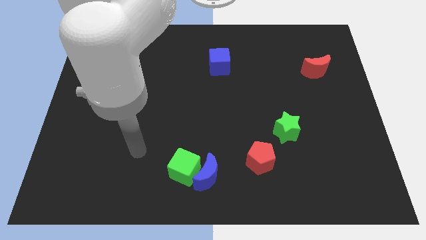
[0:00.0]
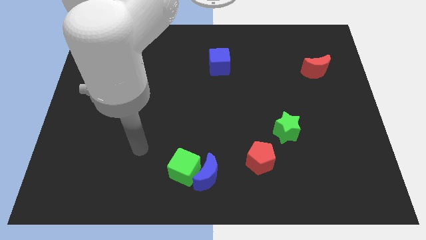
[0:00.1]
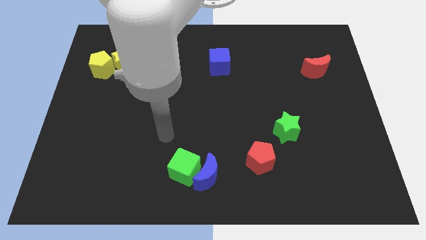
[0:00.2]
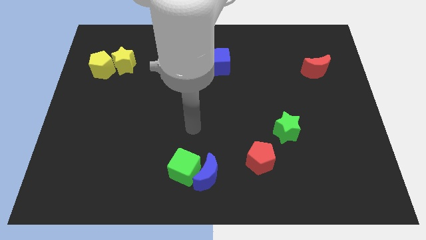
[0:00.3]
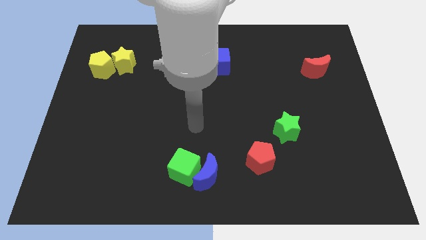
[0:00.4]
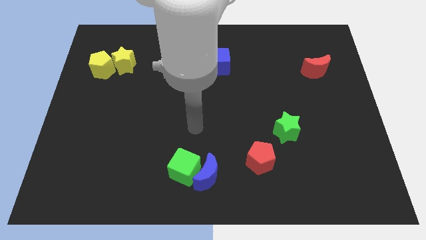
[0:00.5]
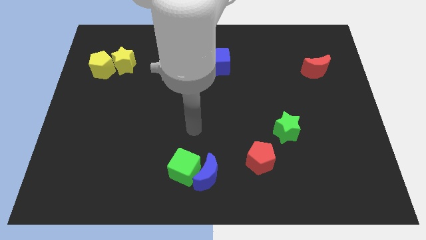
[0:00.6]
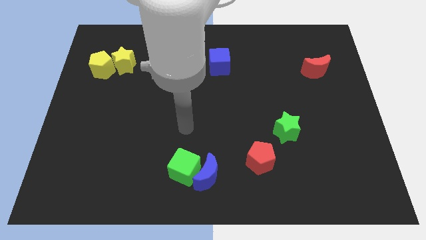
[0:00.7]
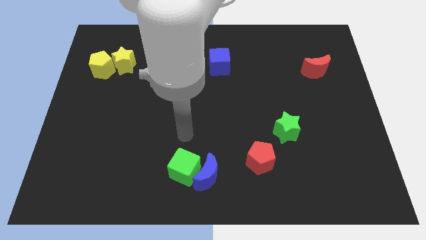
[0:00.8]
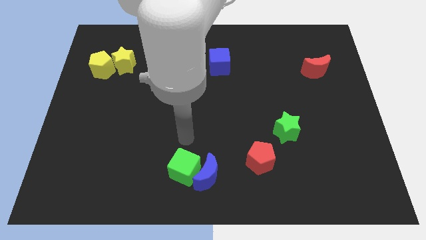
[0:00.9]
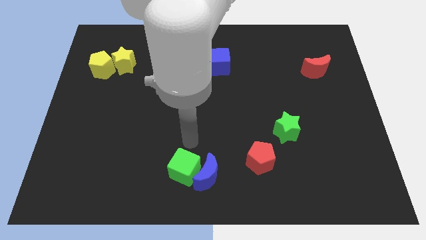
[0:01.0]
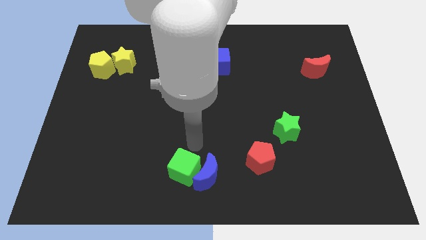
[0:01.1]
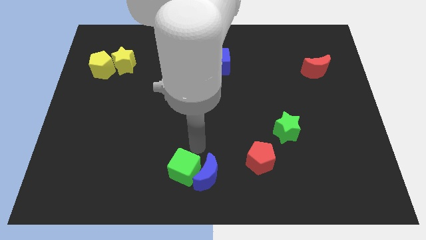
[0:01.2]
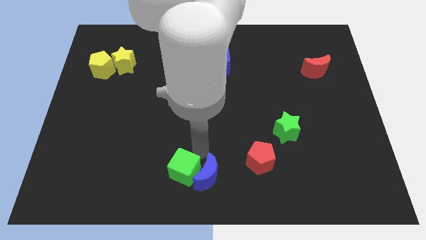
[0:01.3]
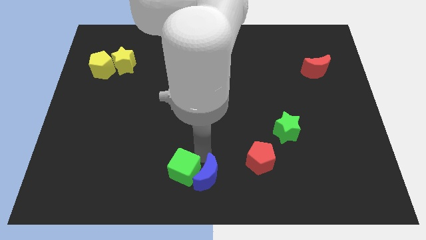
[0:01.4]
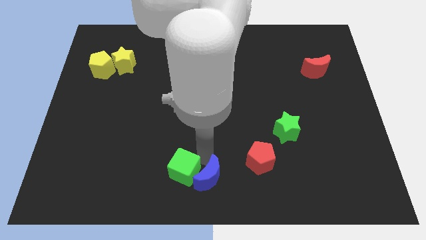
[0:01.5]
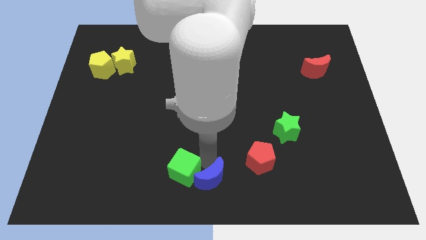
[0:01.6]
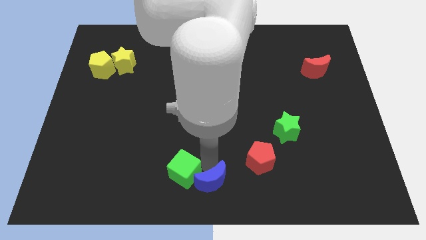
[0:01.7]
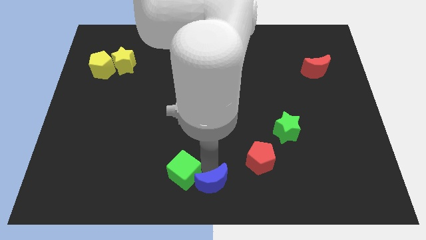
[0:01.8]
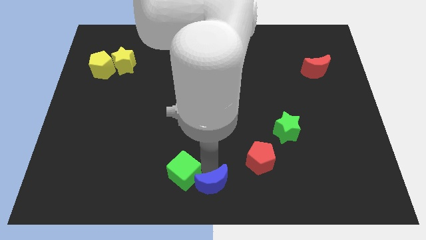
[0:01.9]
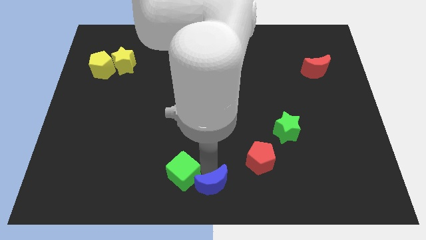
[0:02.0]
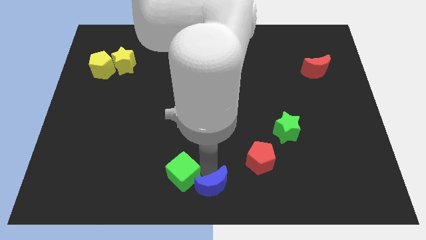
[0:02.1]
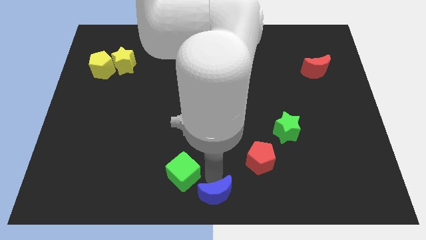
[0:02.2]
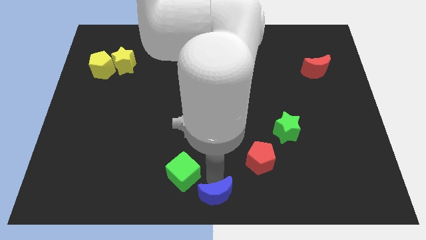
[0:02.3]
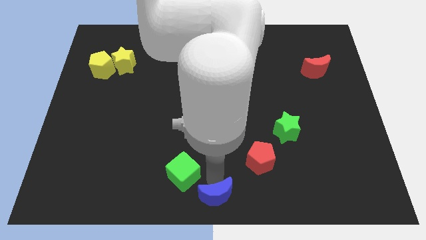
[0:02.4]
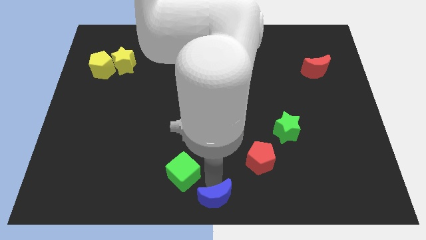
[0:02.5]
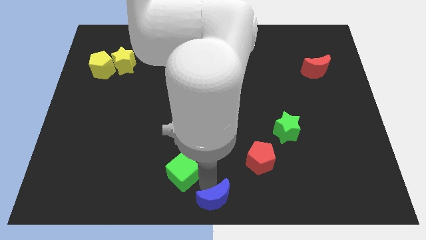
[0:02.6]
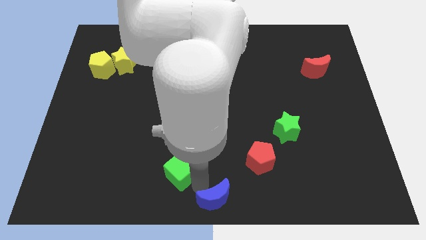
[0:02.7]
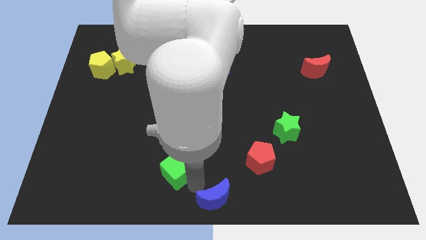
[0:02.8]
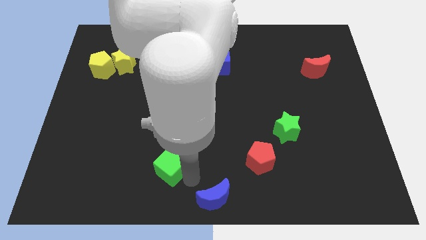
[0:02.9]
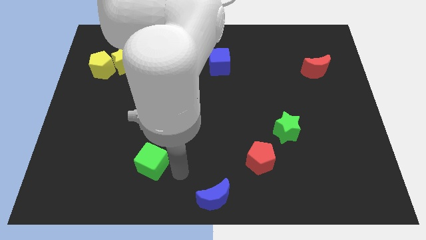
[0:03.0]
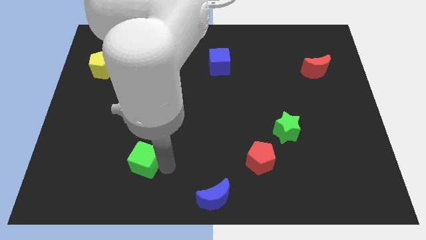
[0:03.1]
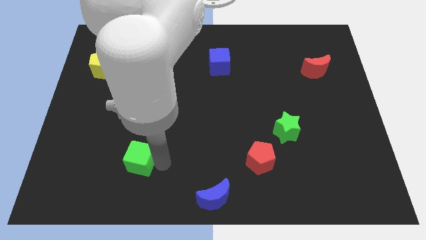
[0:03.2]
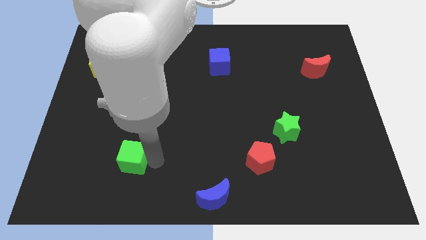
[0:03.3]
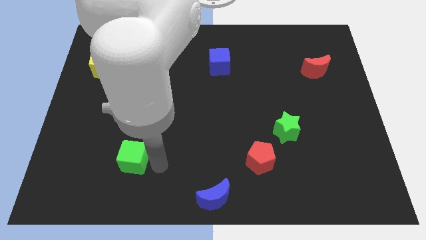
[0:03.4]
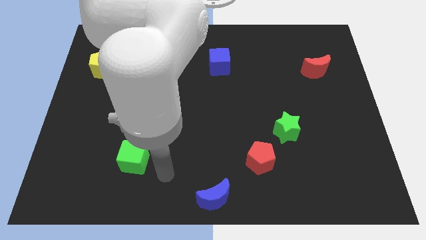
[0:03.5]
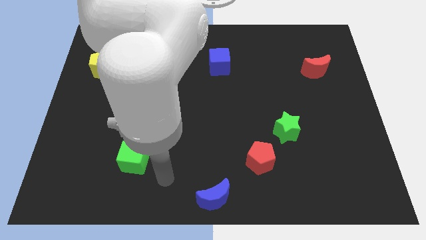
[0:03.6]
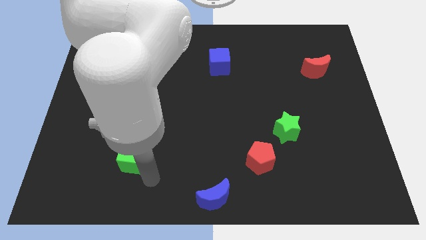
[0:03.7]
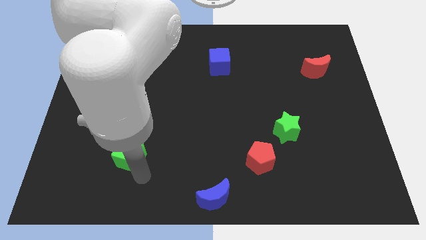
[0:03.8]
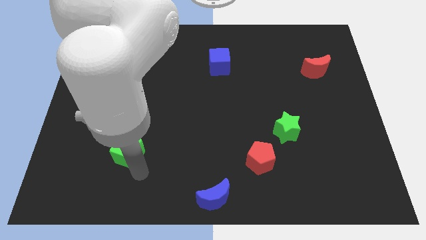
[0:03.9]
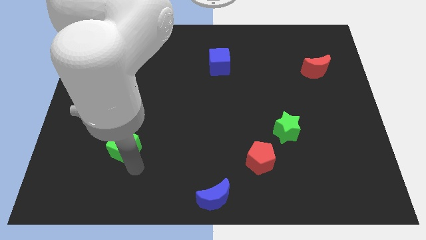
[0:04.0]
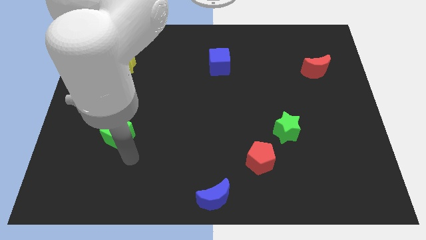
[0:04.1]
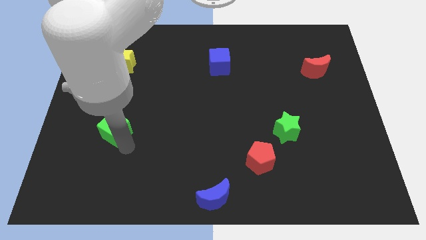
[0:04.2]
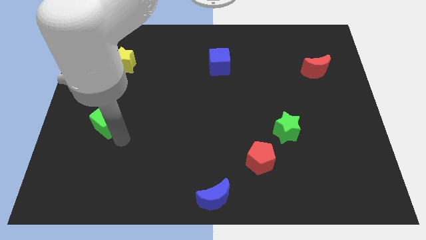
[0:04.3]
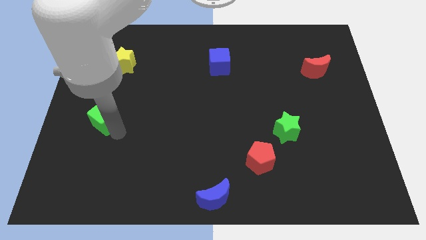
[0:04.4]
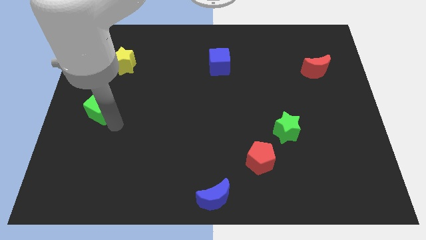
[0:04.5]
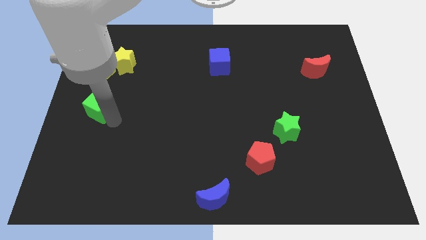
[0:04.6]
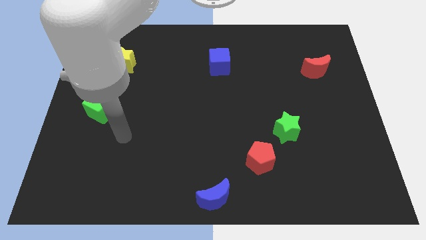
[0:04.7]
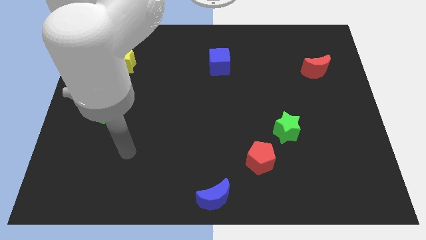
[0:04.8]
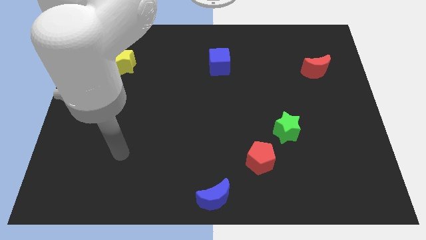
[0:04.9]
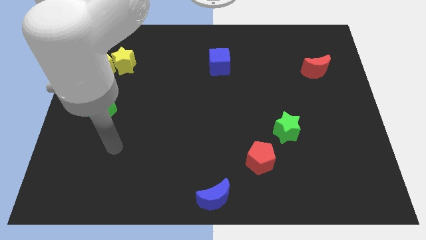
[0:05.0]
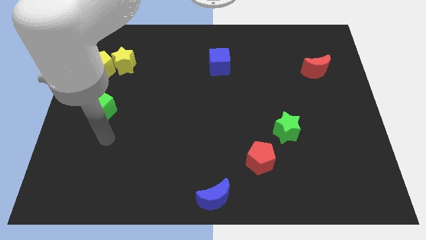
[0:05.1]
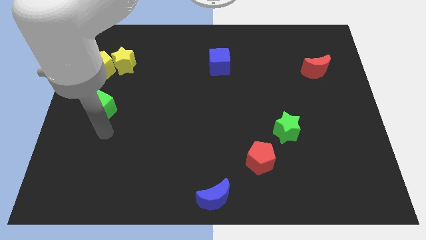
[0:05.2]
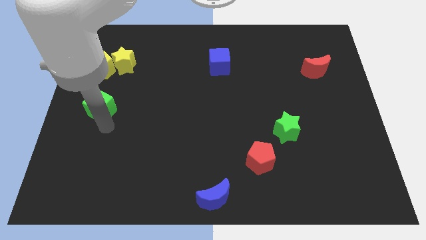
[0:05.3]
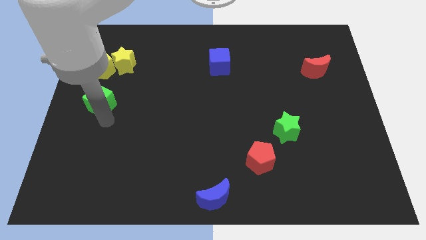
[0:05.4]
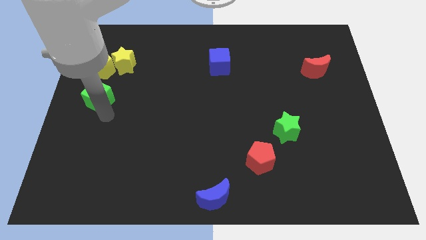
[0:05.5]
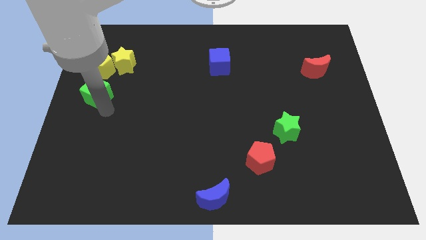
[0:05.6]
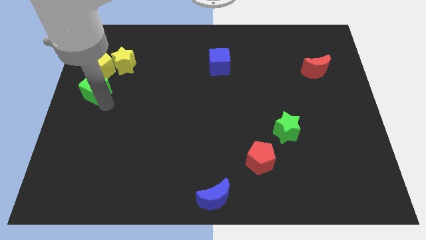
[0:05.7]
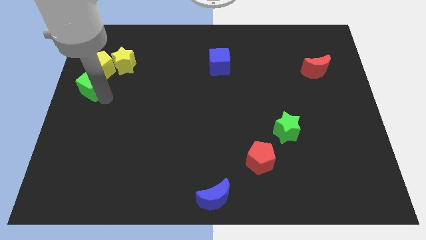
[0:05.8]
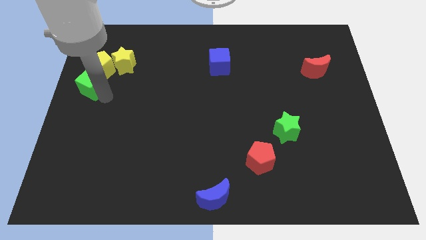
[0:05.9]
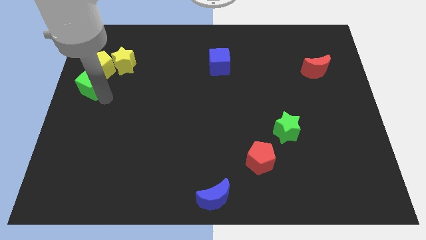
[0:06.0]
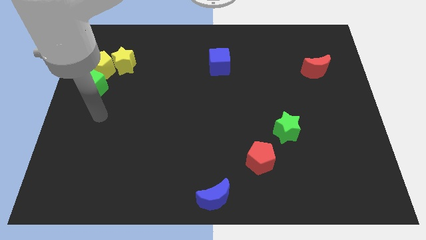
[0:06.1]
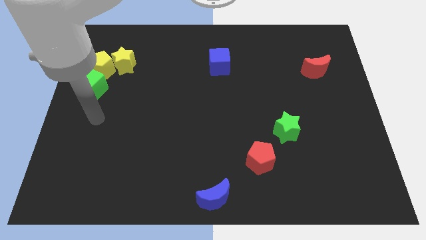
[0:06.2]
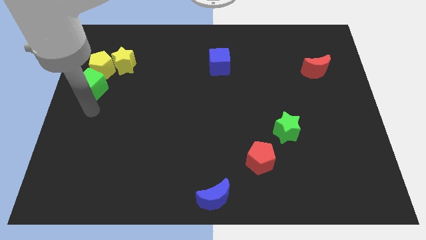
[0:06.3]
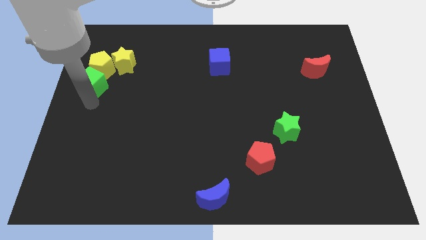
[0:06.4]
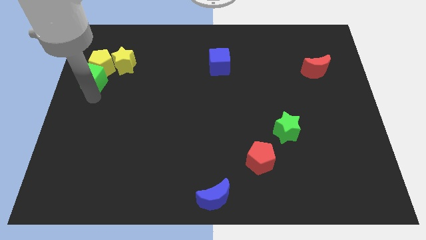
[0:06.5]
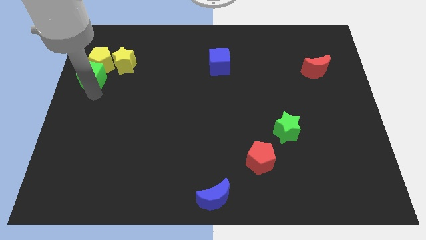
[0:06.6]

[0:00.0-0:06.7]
move the green cube next to the yellow pentagon

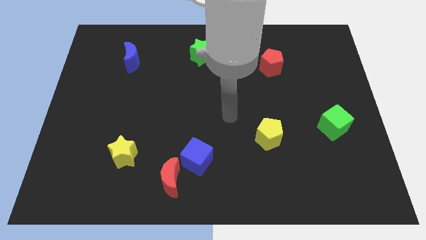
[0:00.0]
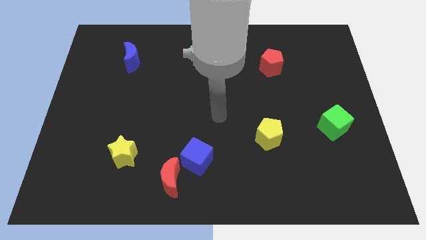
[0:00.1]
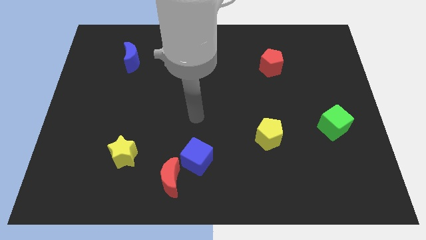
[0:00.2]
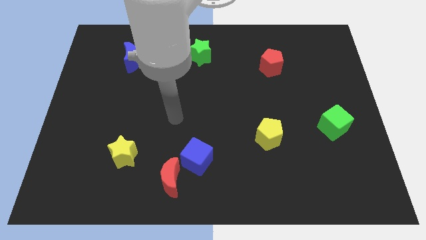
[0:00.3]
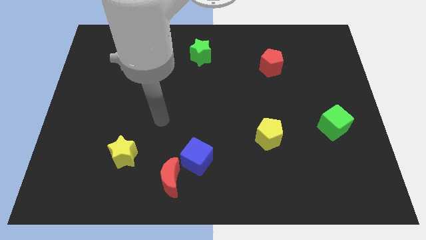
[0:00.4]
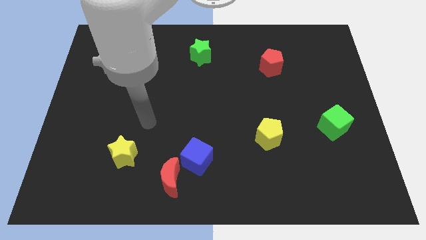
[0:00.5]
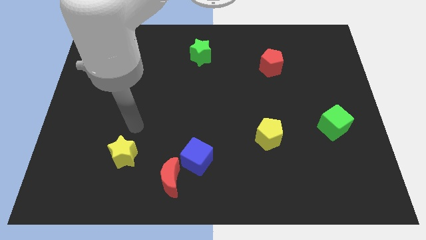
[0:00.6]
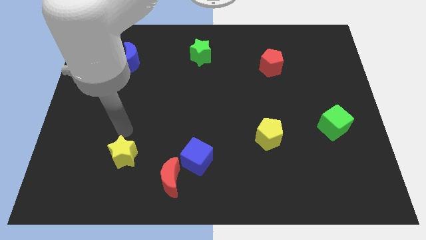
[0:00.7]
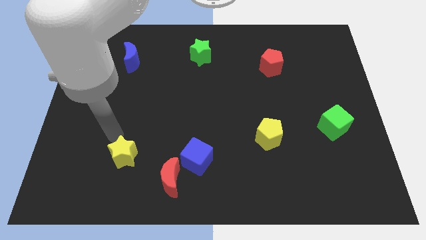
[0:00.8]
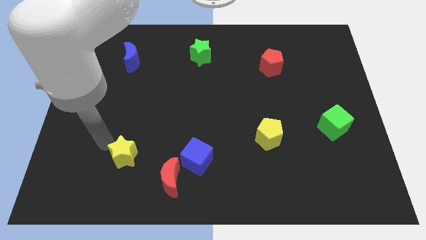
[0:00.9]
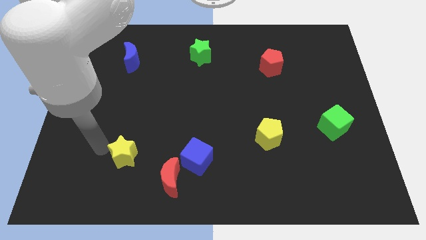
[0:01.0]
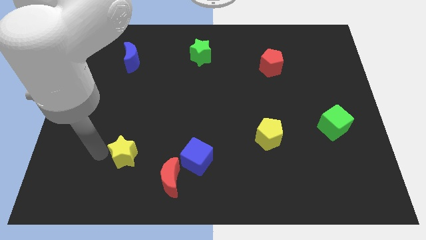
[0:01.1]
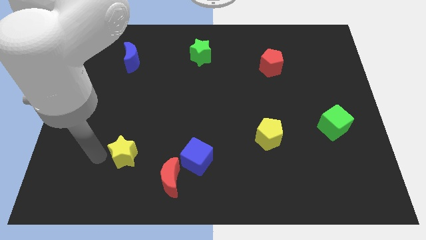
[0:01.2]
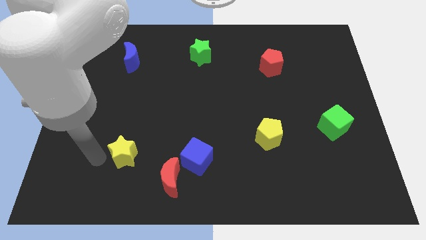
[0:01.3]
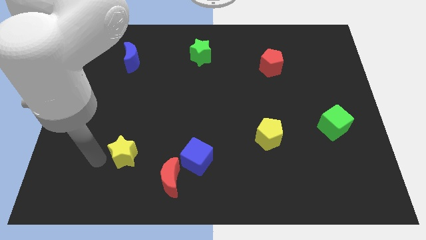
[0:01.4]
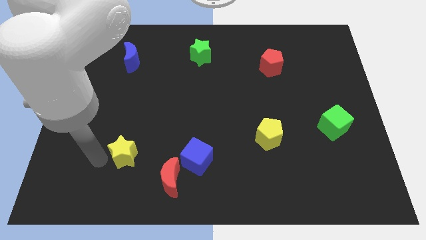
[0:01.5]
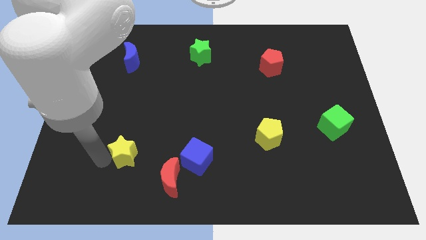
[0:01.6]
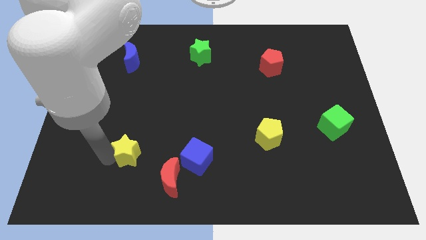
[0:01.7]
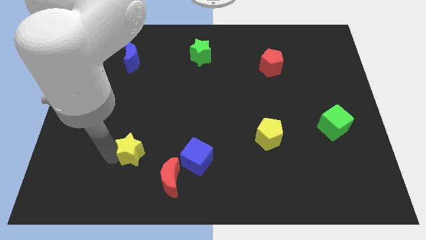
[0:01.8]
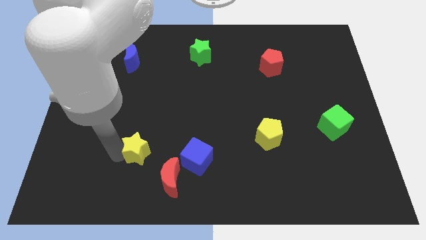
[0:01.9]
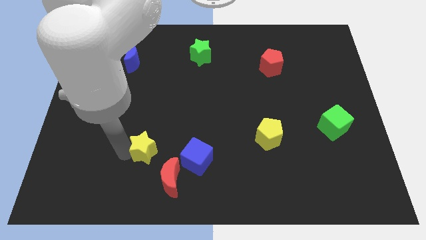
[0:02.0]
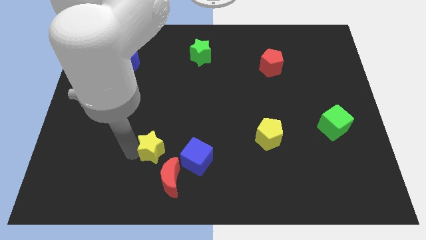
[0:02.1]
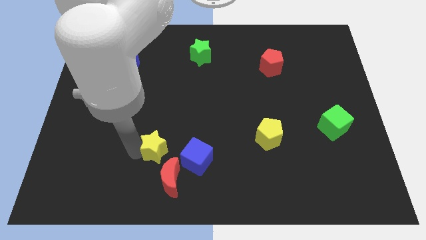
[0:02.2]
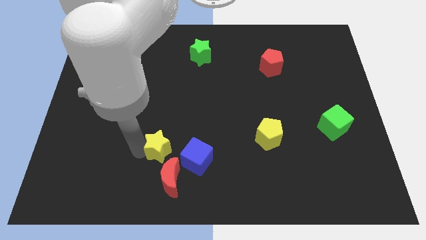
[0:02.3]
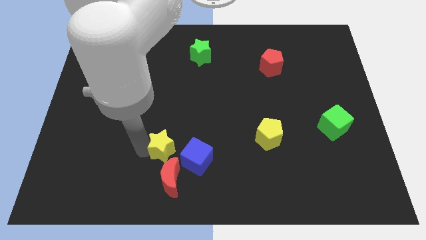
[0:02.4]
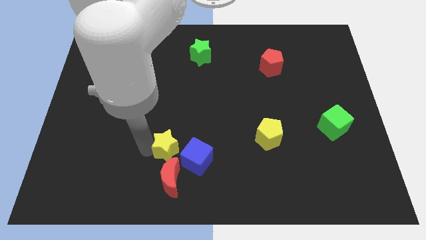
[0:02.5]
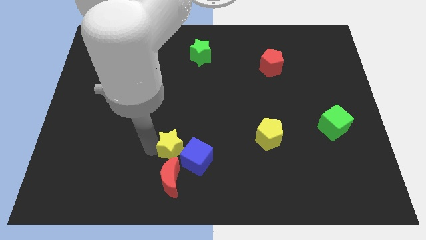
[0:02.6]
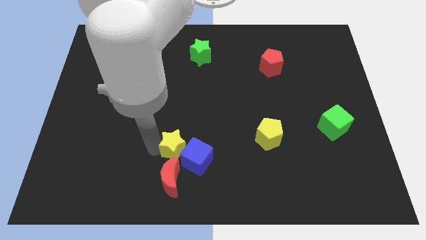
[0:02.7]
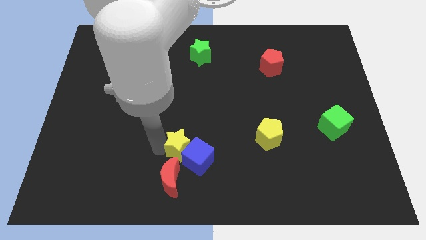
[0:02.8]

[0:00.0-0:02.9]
put the yellow star to the blue cube
